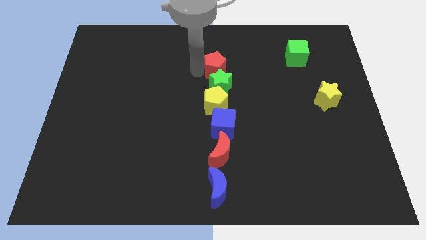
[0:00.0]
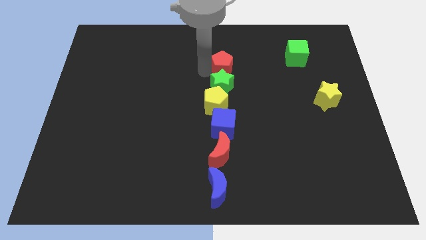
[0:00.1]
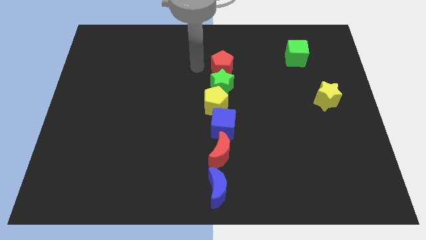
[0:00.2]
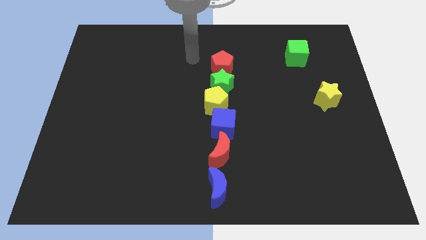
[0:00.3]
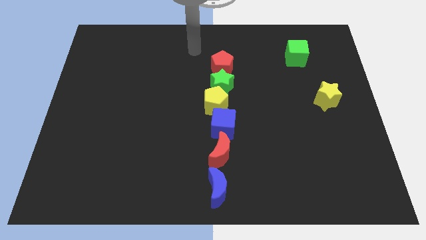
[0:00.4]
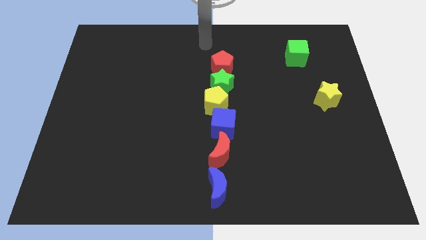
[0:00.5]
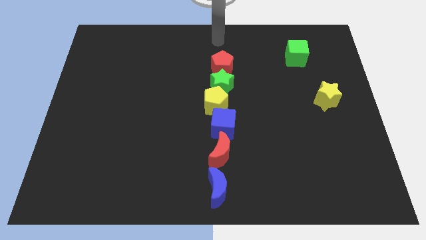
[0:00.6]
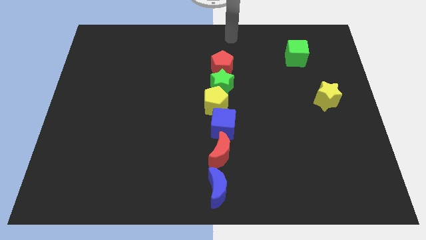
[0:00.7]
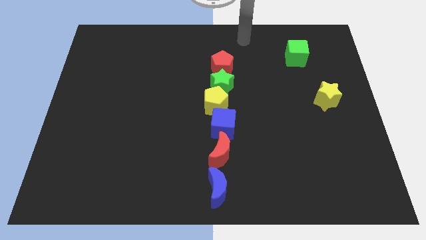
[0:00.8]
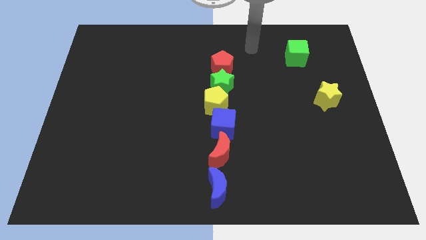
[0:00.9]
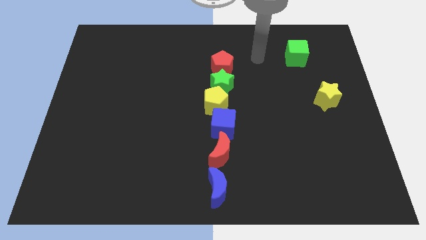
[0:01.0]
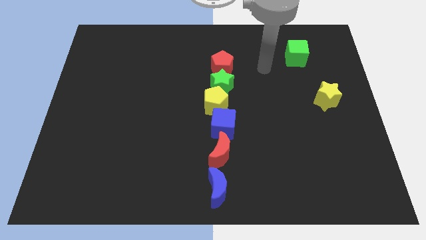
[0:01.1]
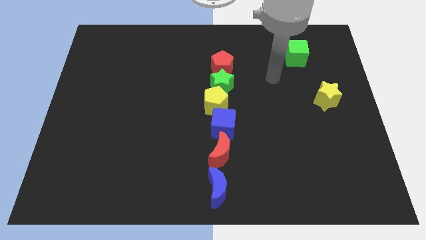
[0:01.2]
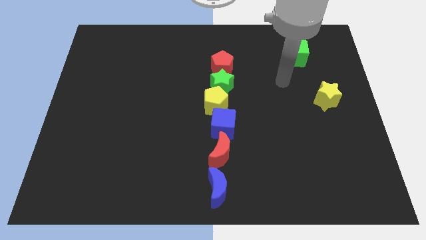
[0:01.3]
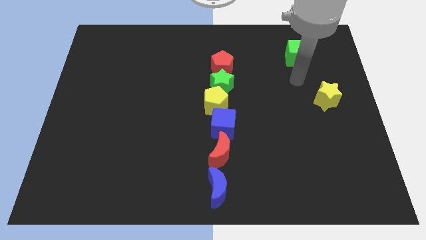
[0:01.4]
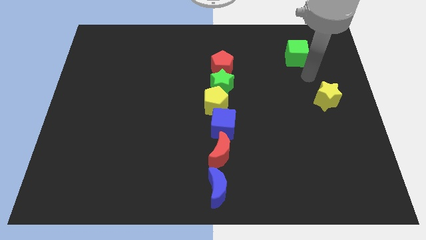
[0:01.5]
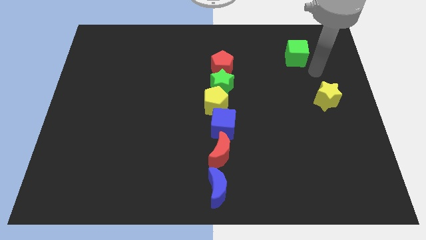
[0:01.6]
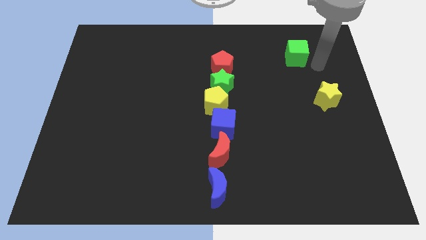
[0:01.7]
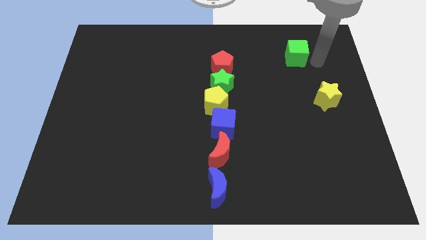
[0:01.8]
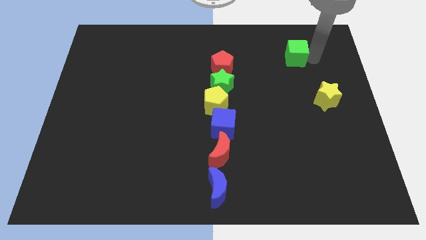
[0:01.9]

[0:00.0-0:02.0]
move your arm to the green cube

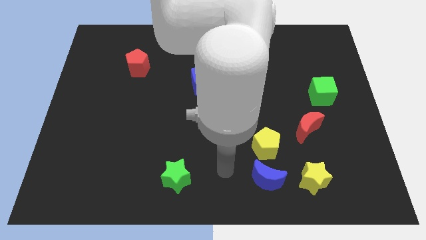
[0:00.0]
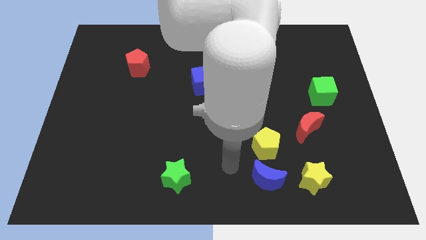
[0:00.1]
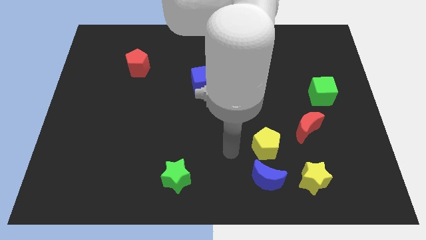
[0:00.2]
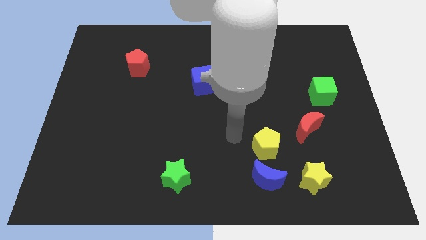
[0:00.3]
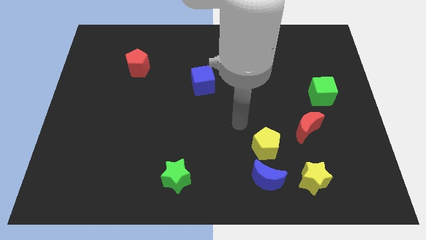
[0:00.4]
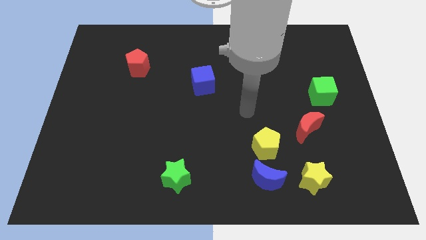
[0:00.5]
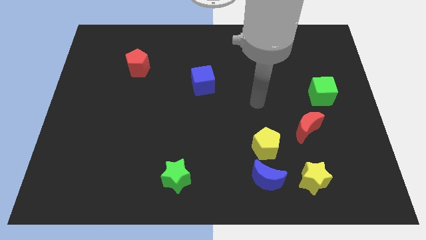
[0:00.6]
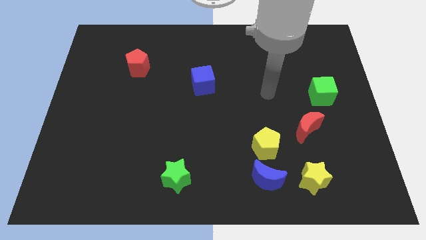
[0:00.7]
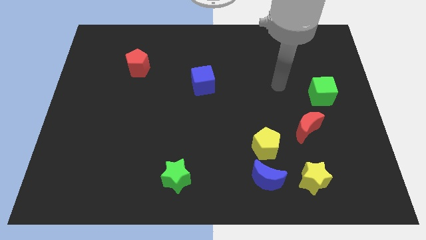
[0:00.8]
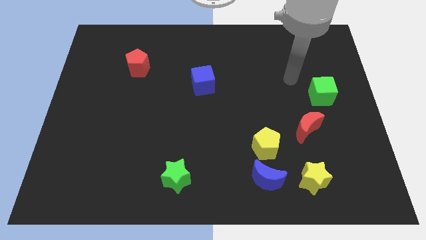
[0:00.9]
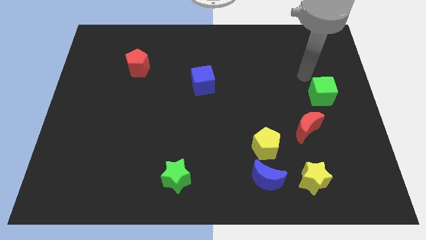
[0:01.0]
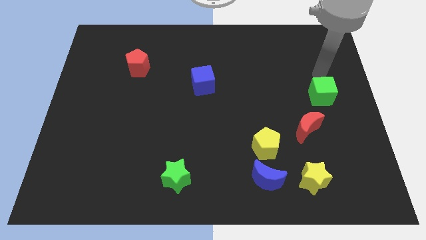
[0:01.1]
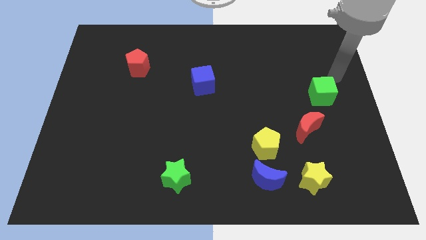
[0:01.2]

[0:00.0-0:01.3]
move your arm to the top of the green cube

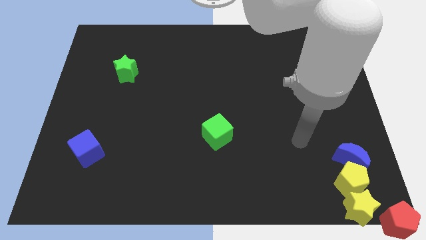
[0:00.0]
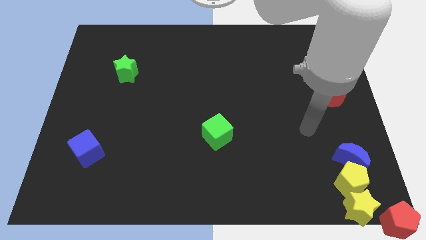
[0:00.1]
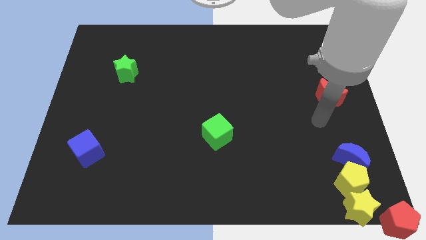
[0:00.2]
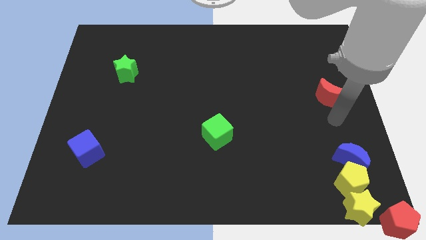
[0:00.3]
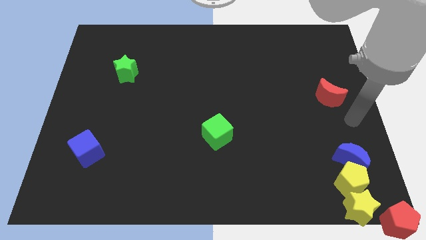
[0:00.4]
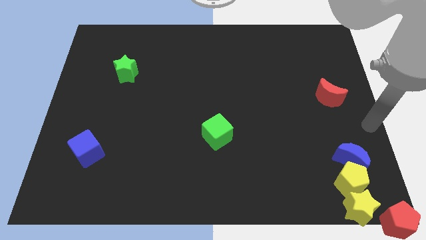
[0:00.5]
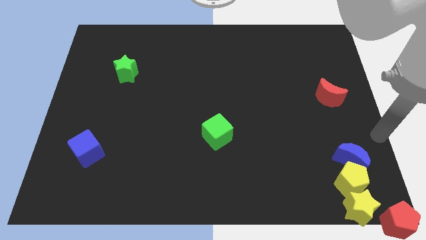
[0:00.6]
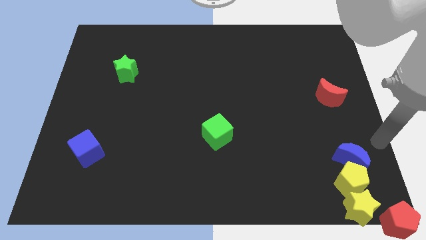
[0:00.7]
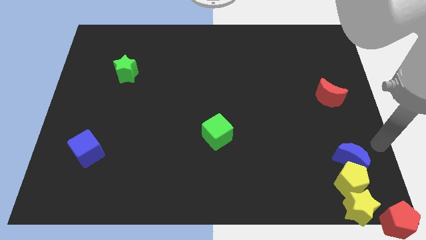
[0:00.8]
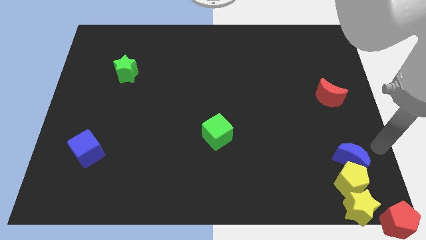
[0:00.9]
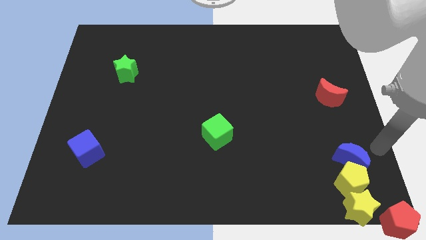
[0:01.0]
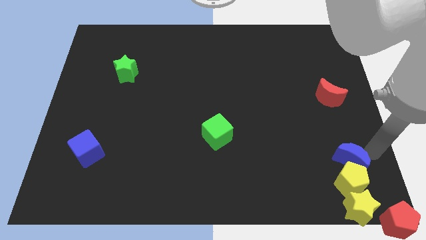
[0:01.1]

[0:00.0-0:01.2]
point your arm at the top right side of the blue crescent

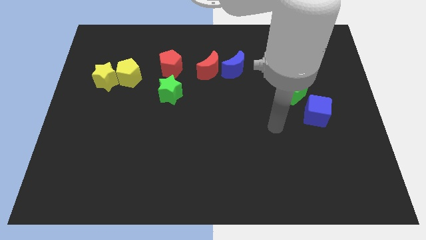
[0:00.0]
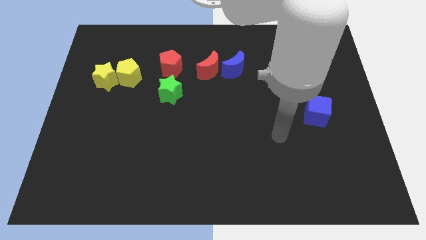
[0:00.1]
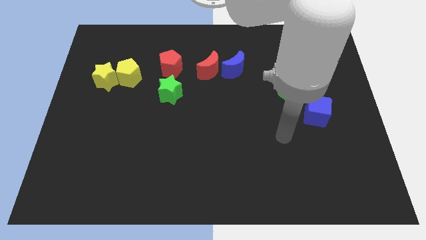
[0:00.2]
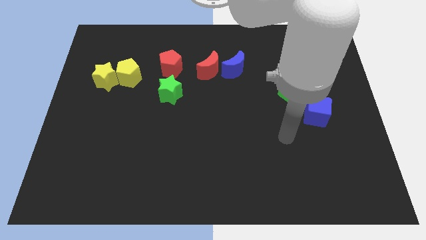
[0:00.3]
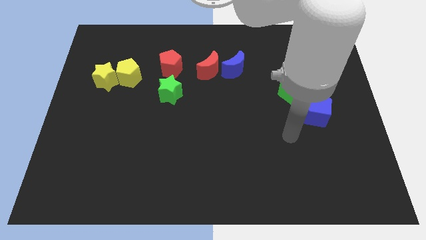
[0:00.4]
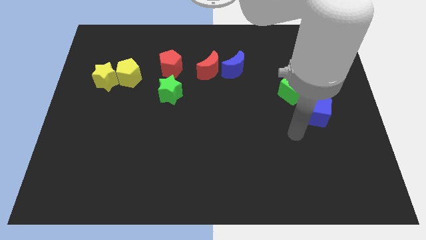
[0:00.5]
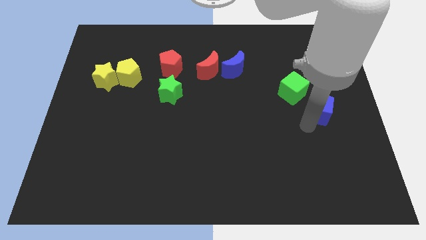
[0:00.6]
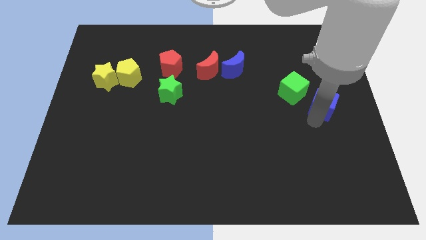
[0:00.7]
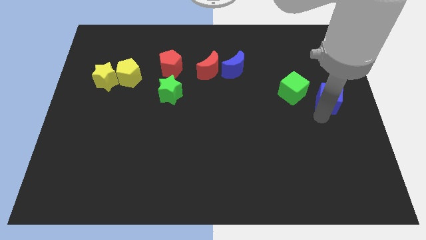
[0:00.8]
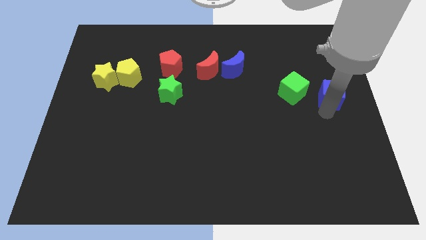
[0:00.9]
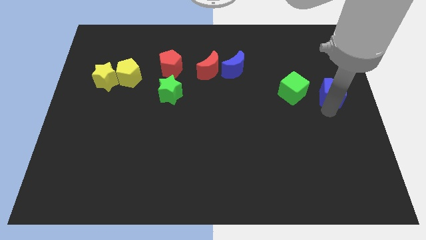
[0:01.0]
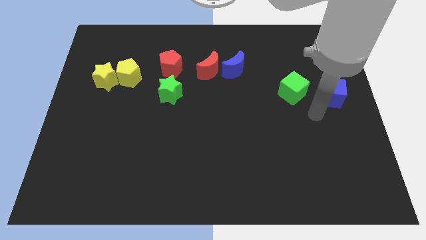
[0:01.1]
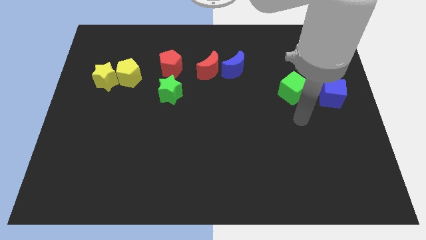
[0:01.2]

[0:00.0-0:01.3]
place the blue cube horizontally to the right side of the green cube

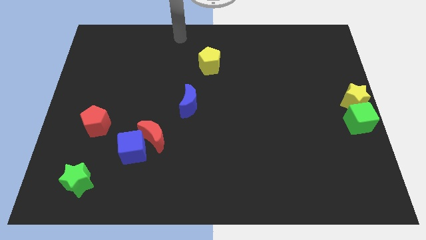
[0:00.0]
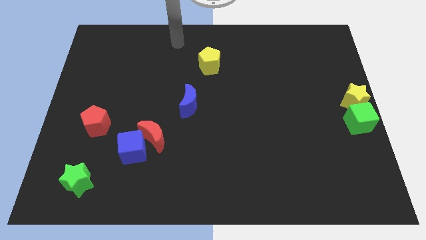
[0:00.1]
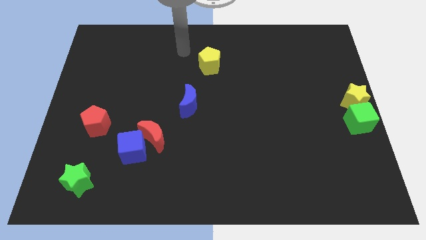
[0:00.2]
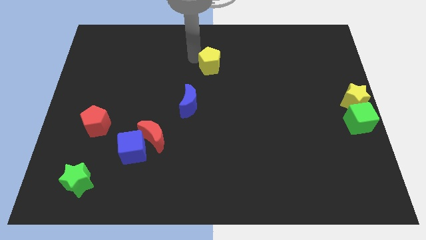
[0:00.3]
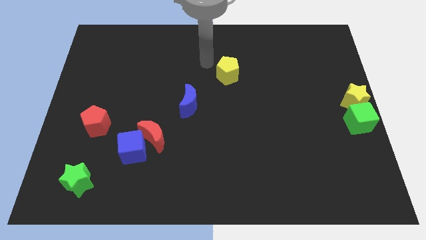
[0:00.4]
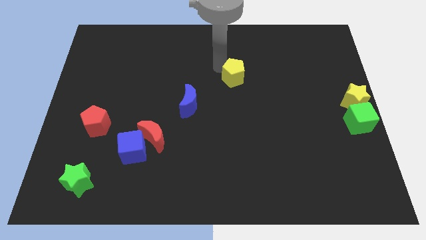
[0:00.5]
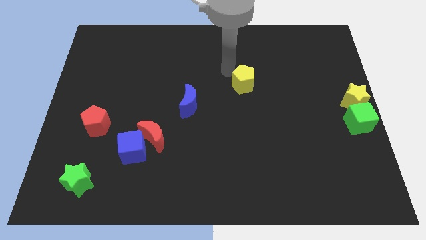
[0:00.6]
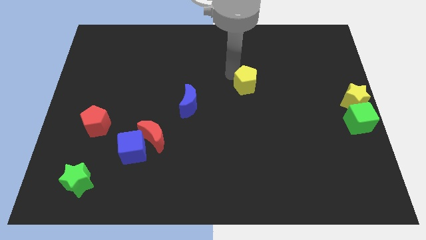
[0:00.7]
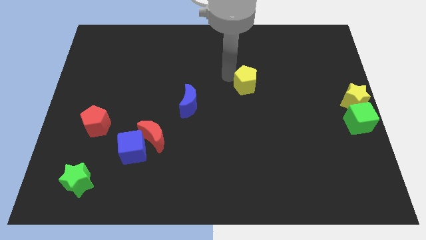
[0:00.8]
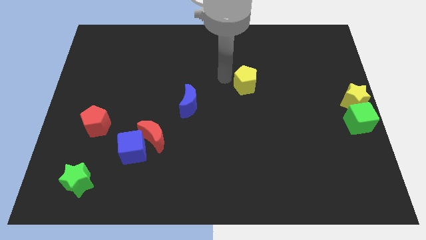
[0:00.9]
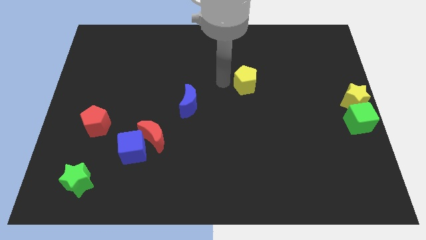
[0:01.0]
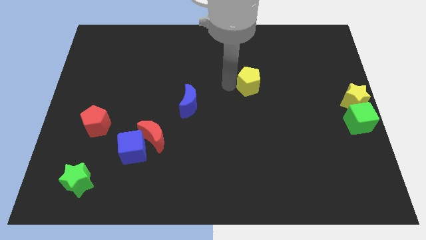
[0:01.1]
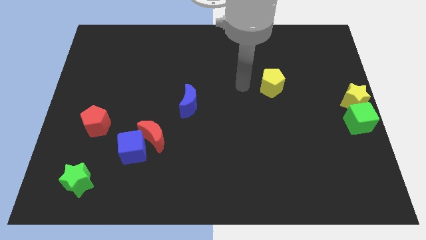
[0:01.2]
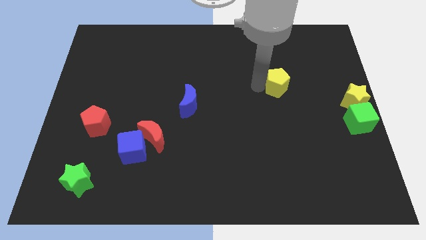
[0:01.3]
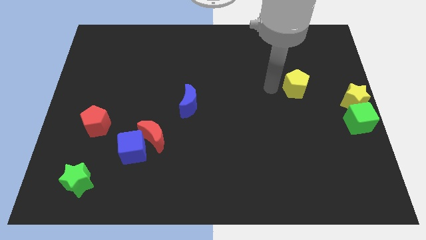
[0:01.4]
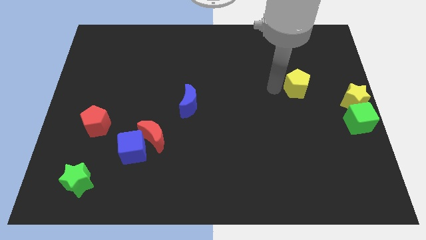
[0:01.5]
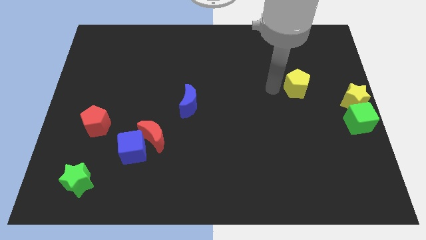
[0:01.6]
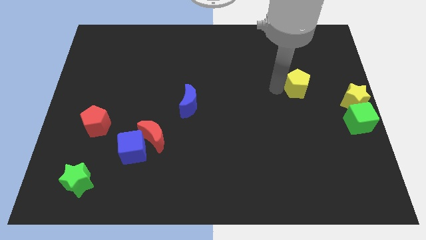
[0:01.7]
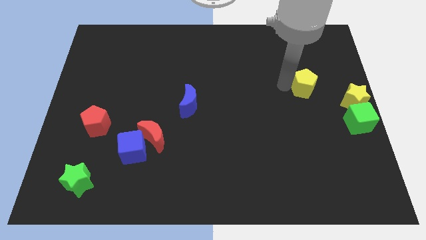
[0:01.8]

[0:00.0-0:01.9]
slide the yellow pentagon towards center right

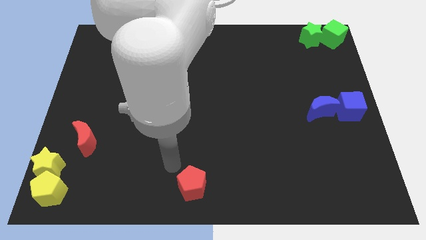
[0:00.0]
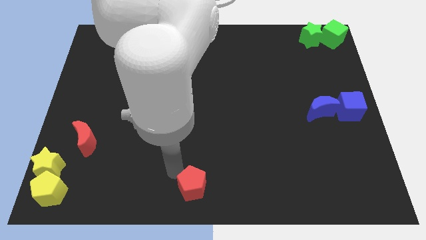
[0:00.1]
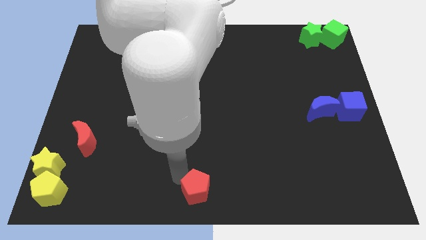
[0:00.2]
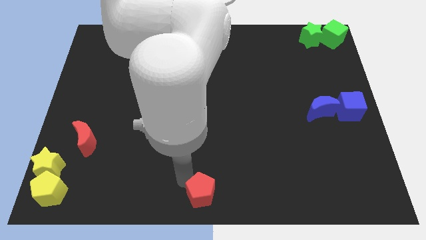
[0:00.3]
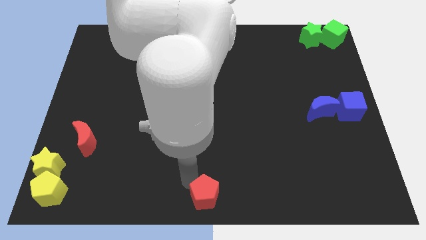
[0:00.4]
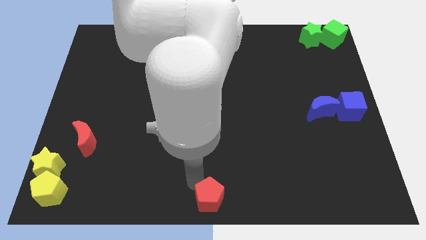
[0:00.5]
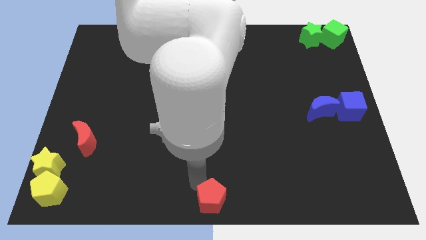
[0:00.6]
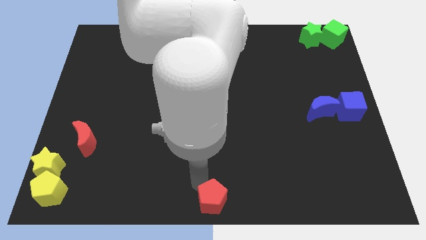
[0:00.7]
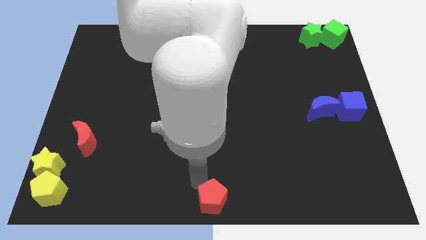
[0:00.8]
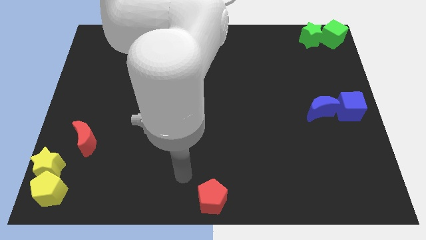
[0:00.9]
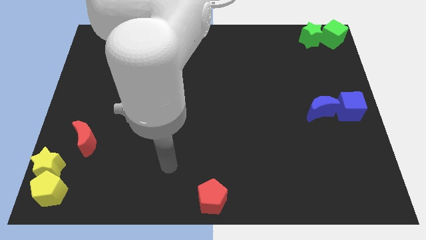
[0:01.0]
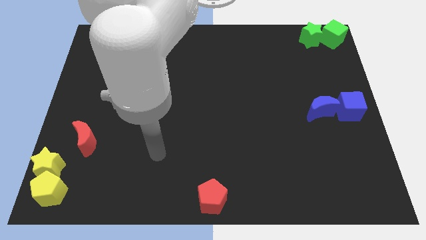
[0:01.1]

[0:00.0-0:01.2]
move the red pentagon to the bottom center of the board
